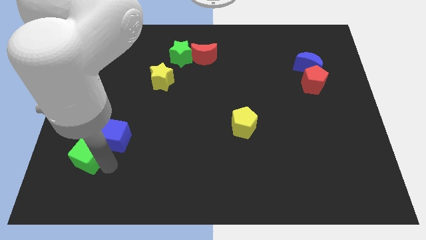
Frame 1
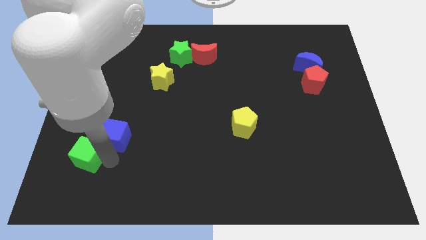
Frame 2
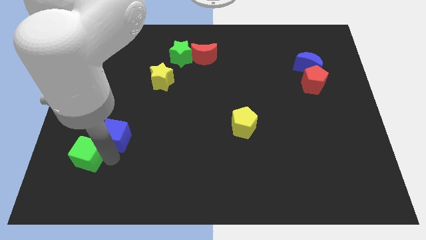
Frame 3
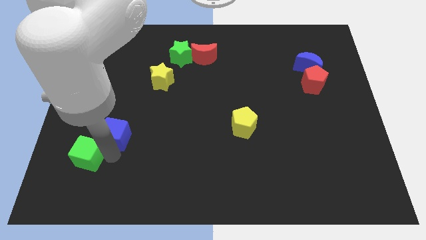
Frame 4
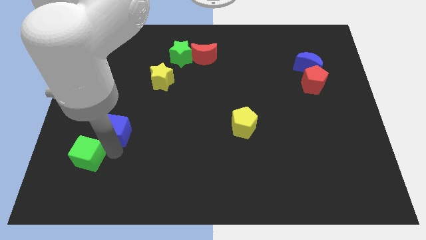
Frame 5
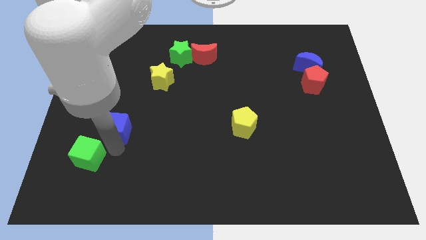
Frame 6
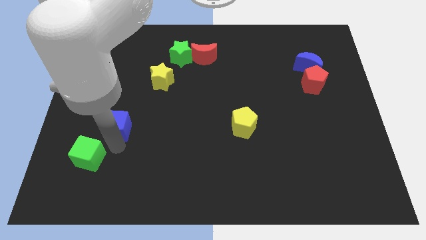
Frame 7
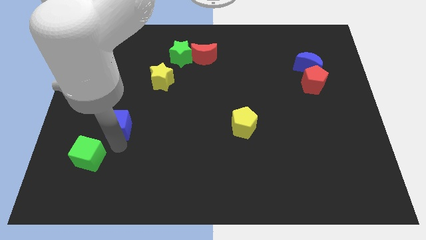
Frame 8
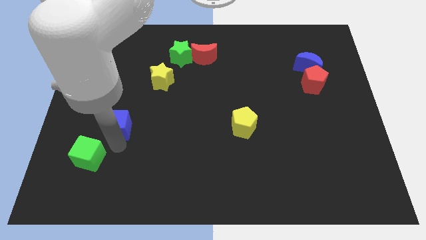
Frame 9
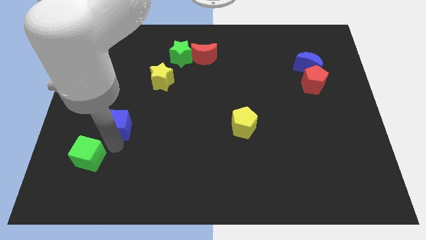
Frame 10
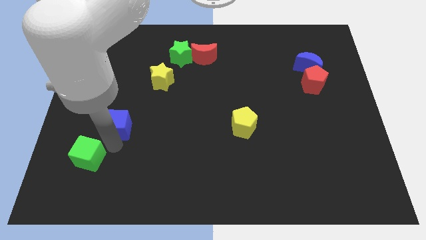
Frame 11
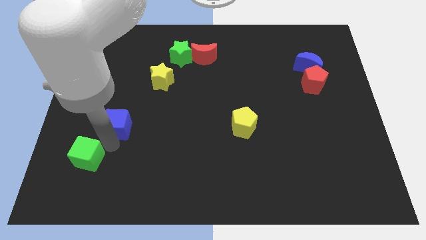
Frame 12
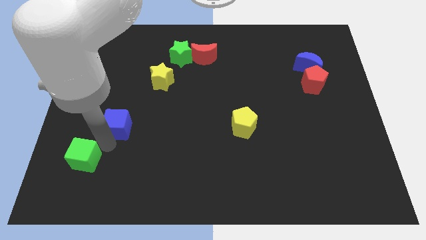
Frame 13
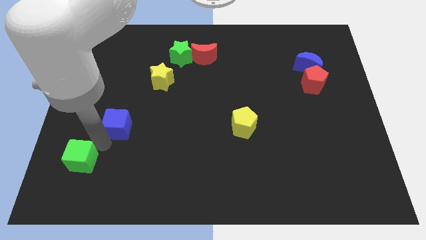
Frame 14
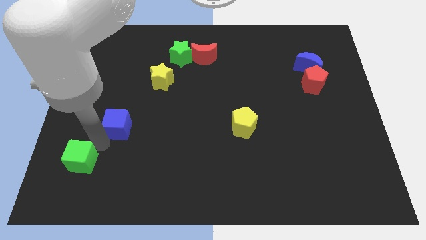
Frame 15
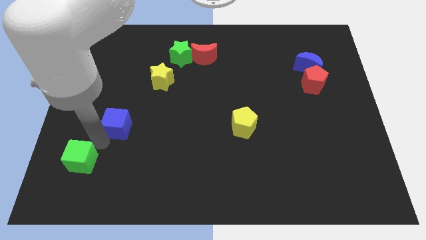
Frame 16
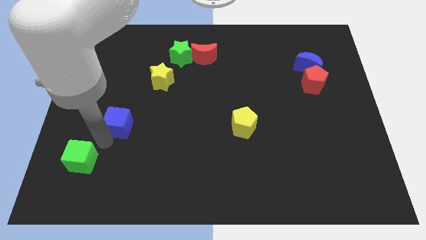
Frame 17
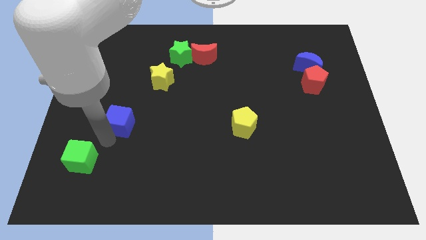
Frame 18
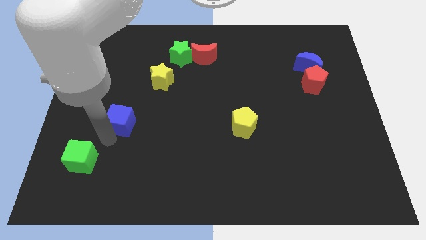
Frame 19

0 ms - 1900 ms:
separate the blue cube away from the green cube

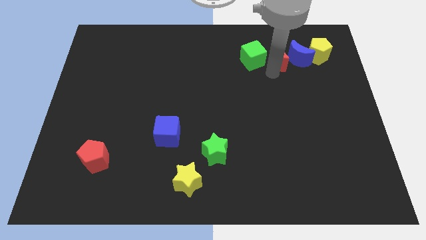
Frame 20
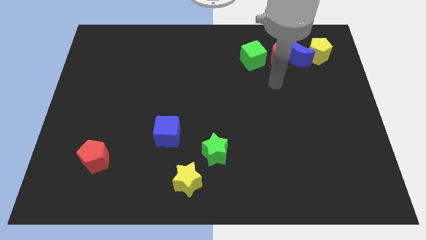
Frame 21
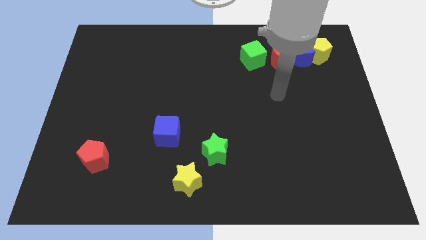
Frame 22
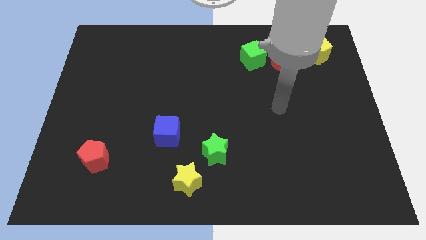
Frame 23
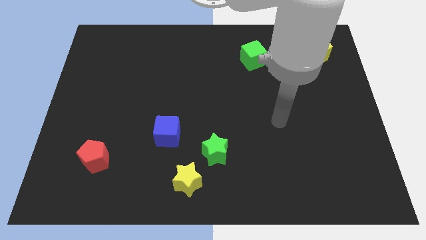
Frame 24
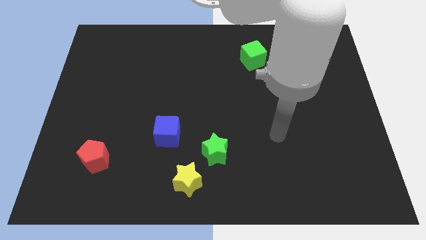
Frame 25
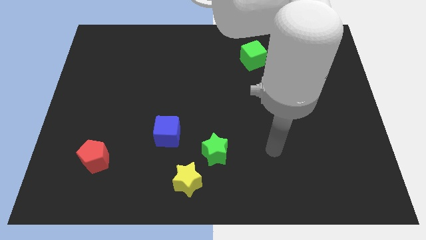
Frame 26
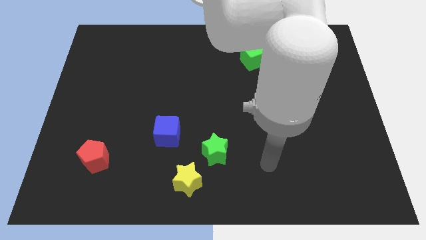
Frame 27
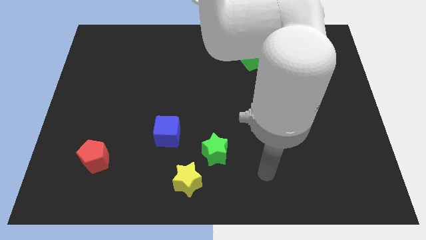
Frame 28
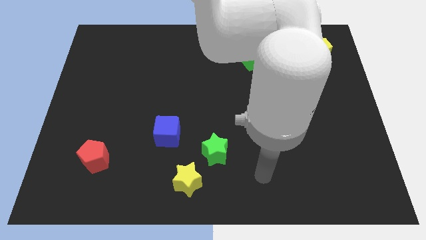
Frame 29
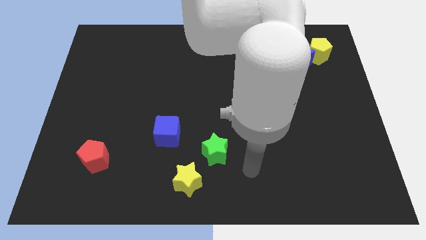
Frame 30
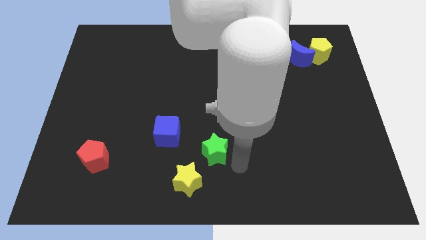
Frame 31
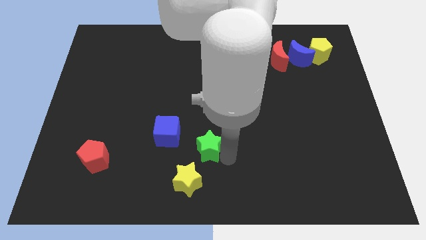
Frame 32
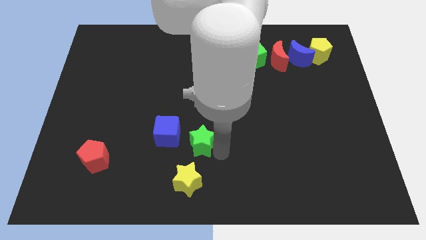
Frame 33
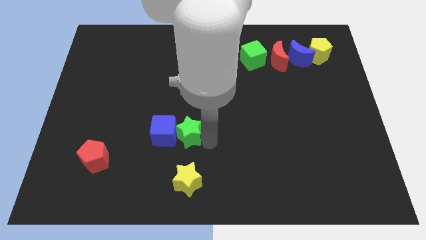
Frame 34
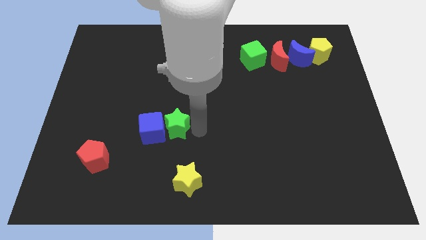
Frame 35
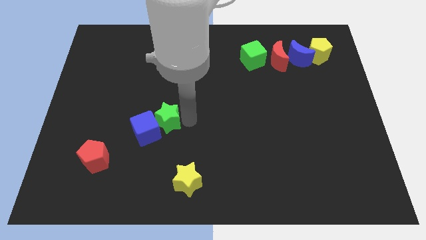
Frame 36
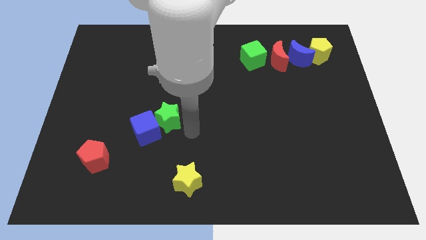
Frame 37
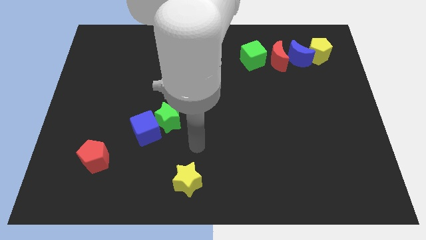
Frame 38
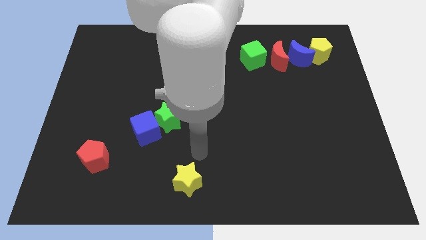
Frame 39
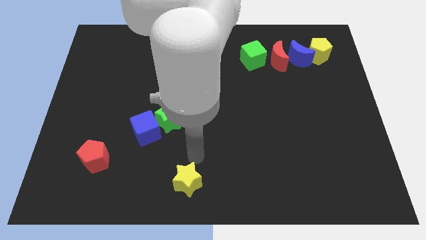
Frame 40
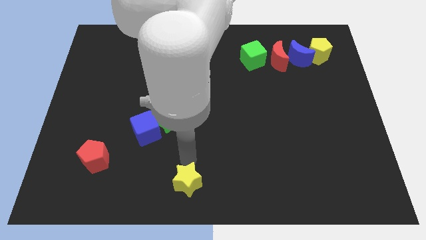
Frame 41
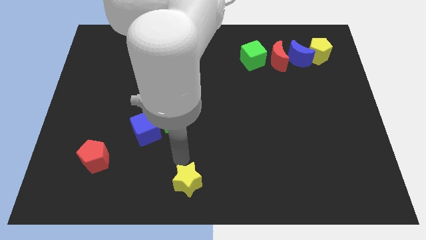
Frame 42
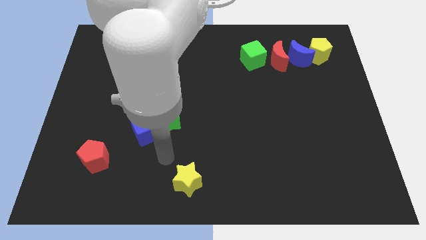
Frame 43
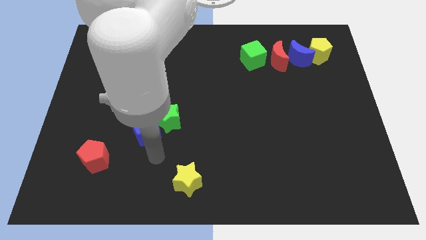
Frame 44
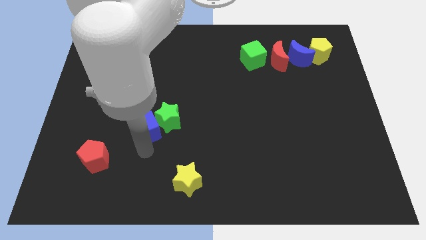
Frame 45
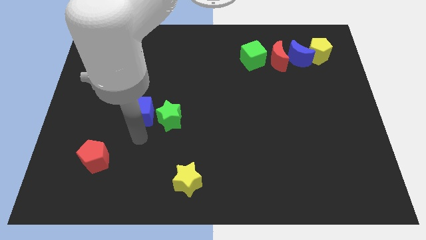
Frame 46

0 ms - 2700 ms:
place the green star right to the blue cube

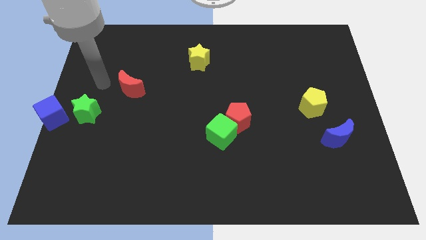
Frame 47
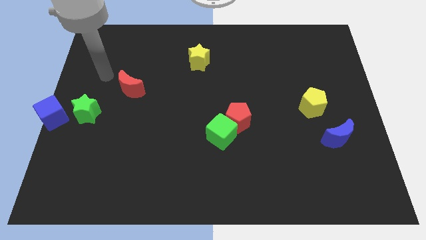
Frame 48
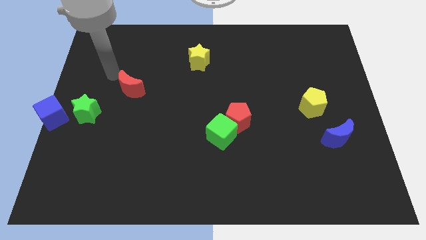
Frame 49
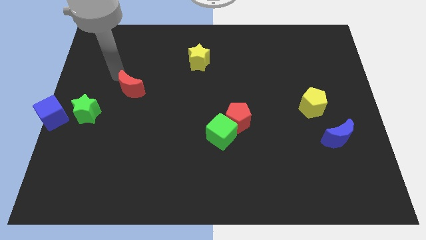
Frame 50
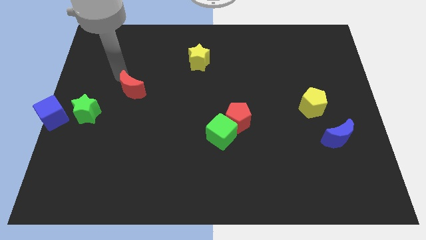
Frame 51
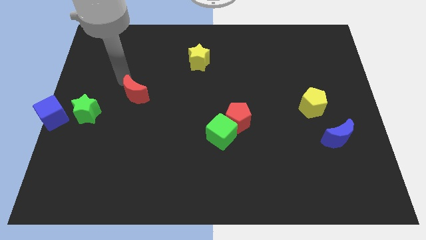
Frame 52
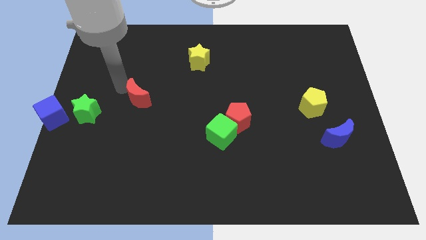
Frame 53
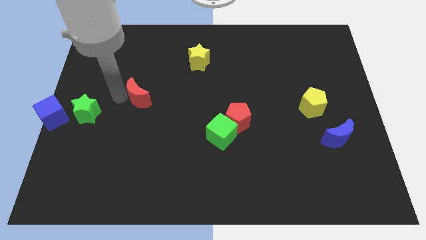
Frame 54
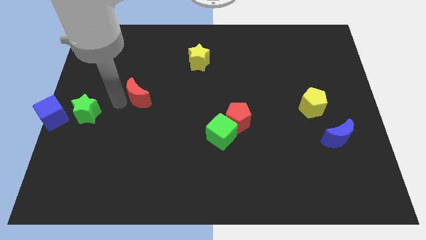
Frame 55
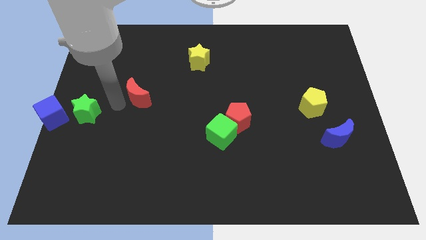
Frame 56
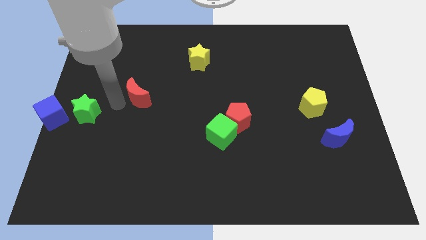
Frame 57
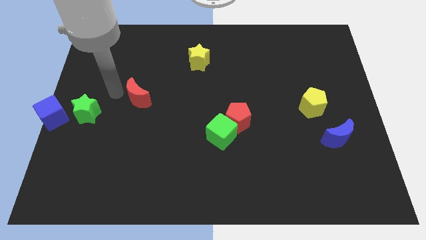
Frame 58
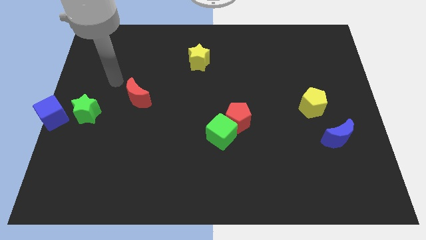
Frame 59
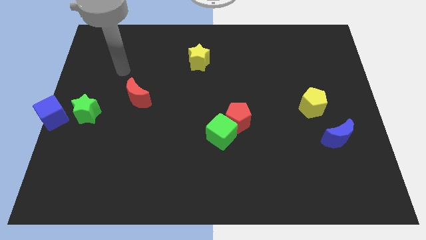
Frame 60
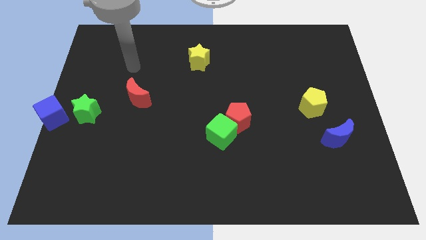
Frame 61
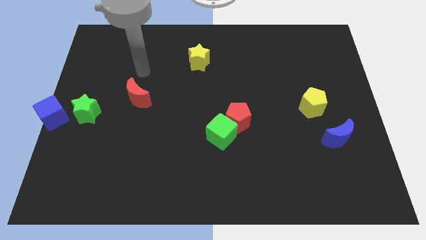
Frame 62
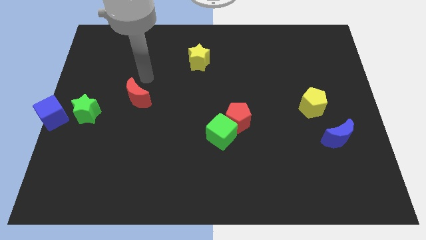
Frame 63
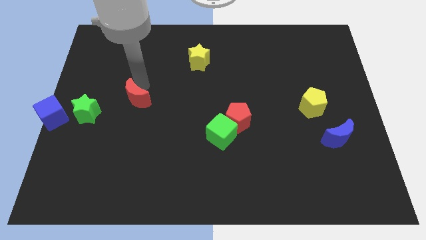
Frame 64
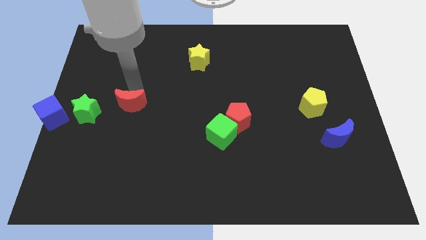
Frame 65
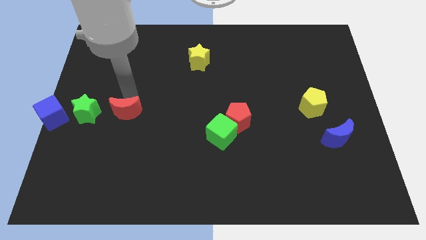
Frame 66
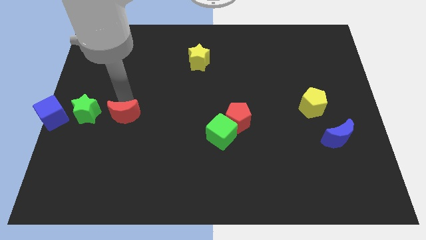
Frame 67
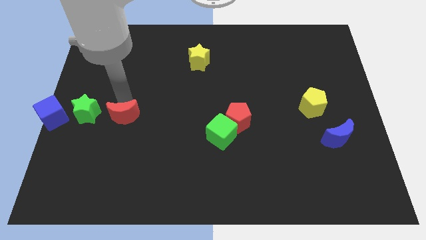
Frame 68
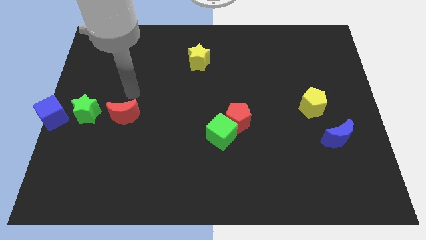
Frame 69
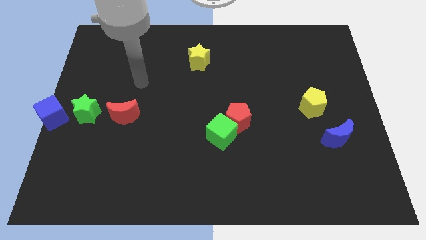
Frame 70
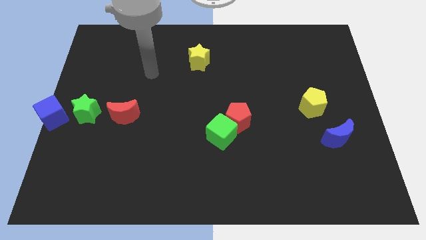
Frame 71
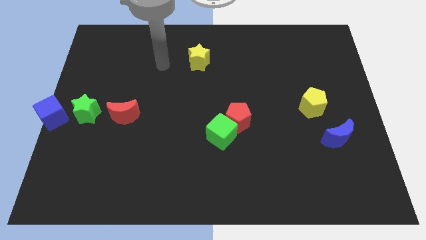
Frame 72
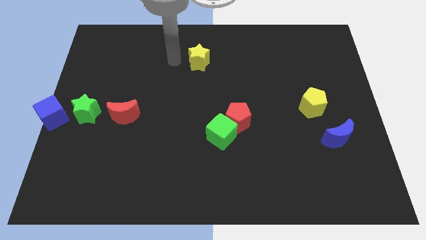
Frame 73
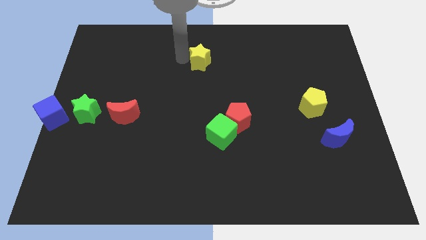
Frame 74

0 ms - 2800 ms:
push red moon beside green star

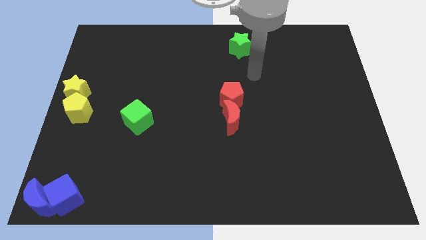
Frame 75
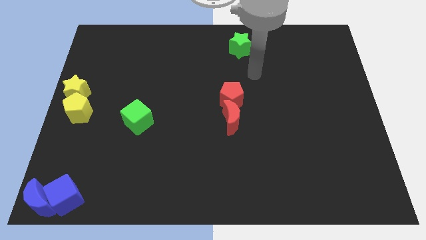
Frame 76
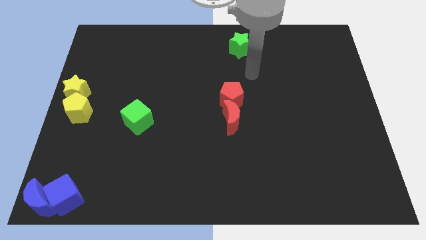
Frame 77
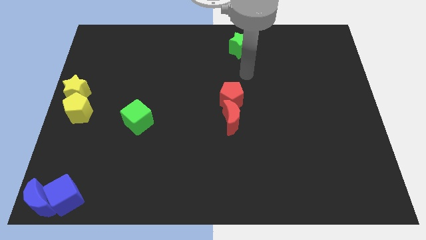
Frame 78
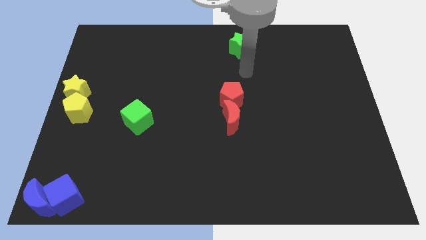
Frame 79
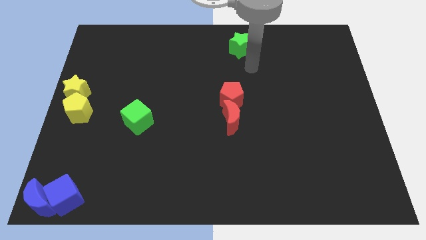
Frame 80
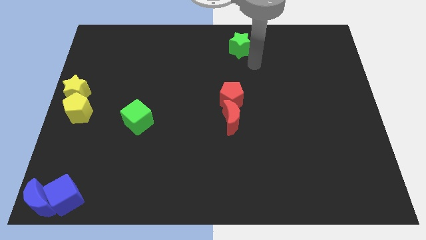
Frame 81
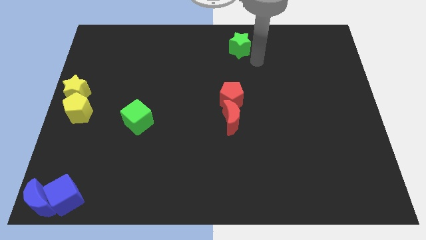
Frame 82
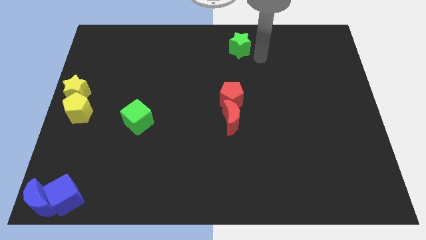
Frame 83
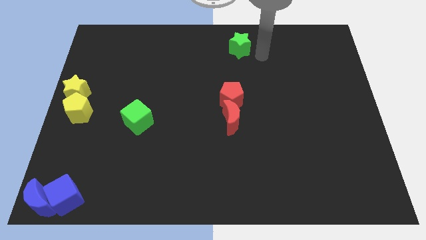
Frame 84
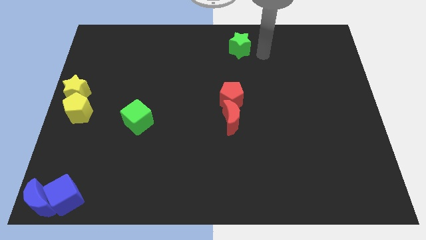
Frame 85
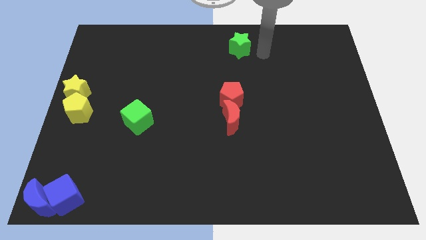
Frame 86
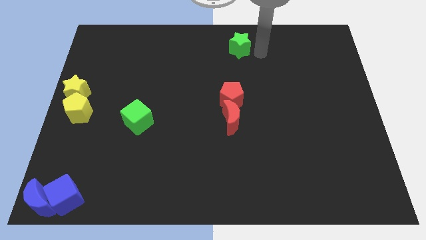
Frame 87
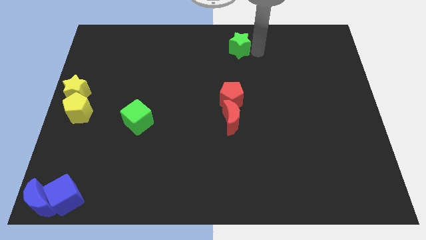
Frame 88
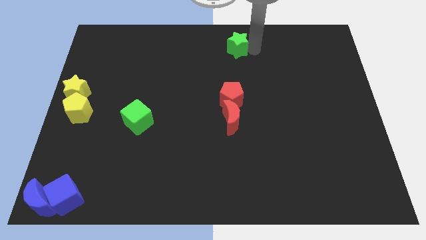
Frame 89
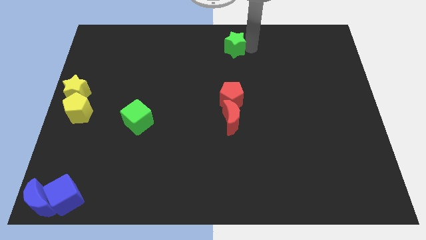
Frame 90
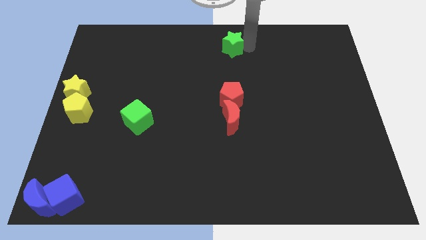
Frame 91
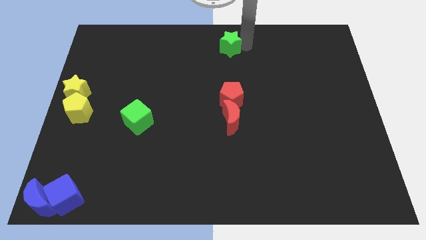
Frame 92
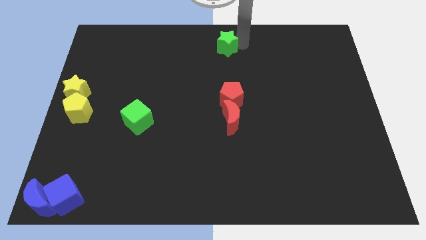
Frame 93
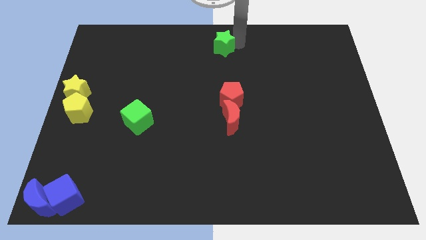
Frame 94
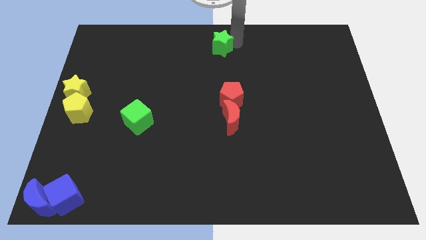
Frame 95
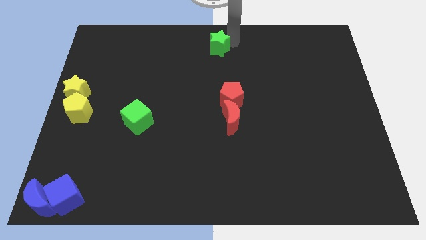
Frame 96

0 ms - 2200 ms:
move the green star towards the top centre of the board
